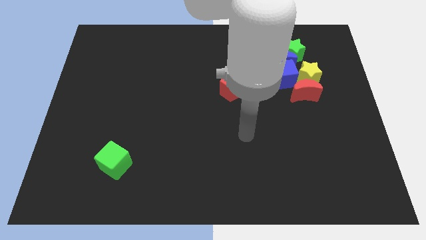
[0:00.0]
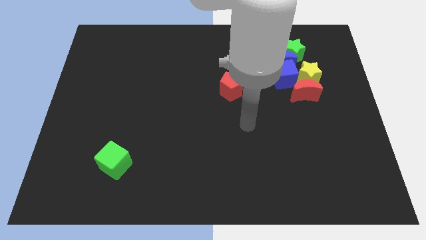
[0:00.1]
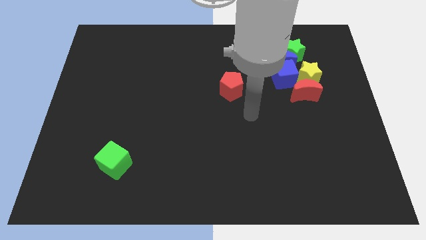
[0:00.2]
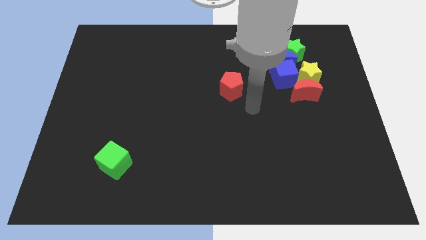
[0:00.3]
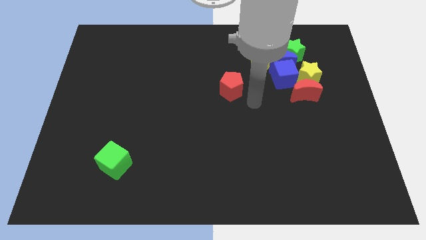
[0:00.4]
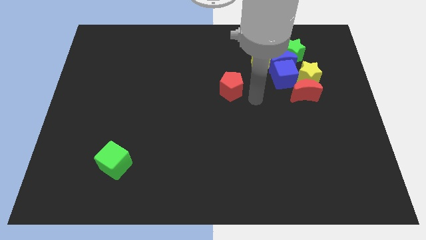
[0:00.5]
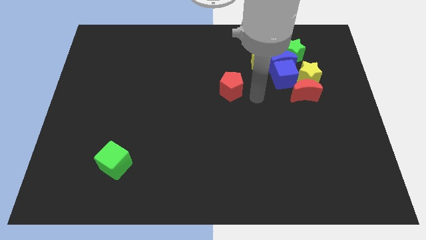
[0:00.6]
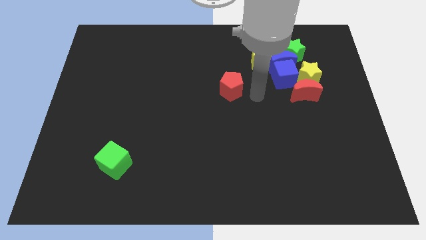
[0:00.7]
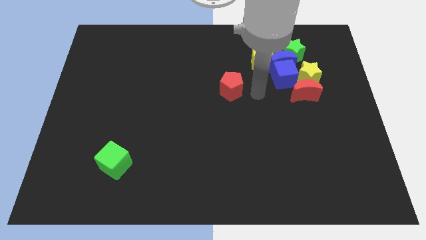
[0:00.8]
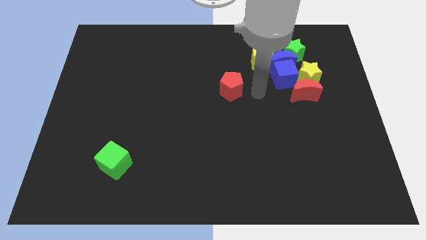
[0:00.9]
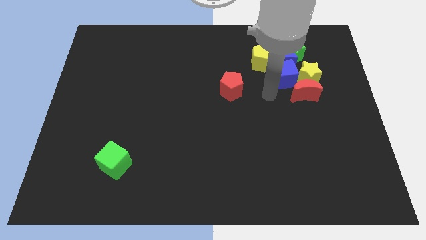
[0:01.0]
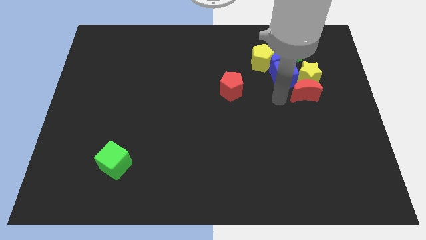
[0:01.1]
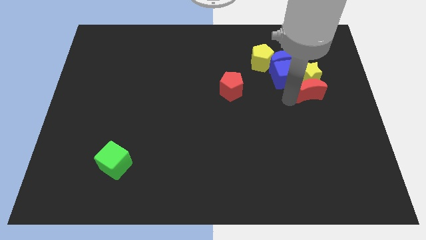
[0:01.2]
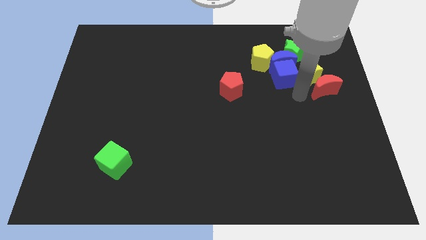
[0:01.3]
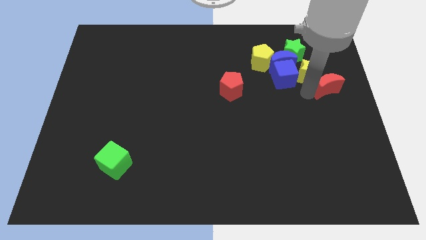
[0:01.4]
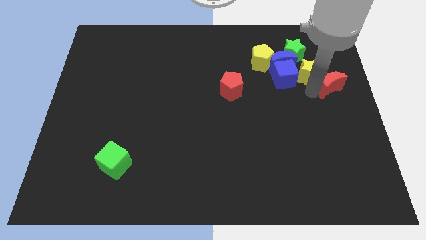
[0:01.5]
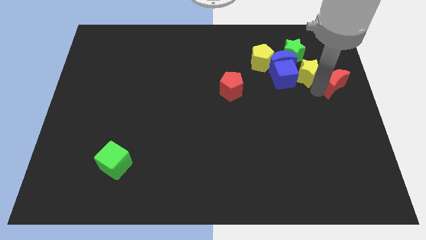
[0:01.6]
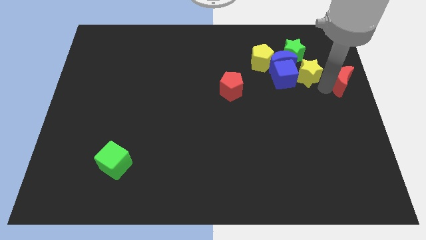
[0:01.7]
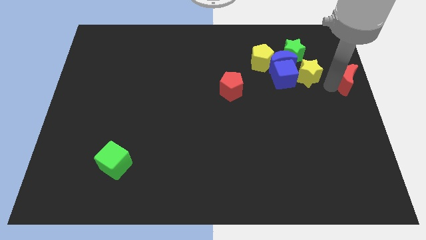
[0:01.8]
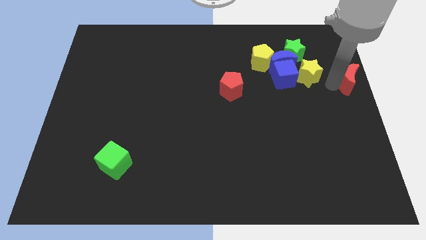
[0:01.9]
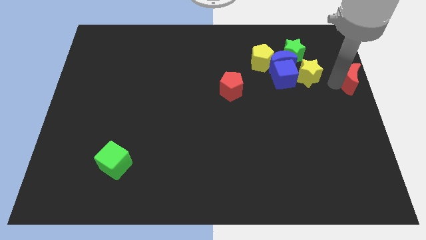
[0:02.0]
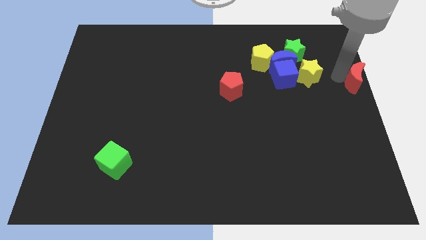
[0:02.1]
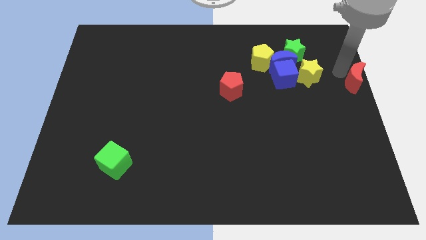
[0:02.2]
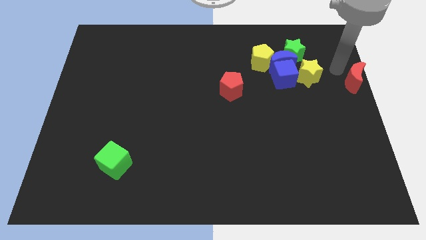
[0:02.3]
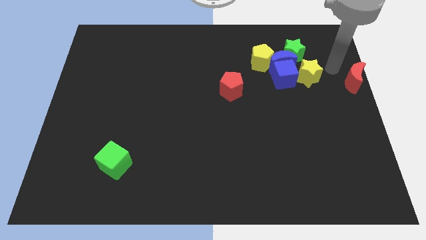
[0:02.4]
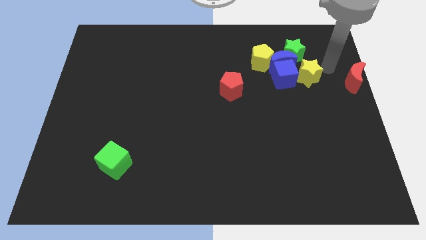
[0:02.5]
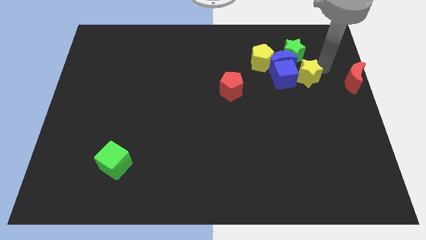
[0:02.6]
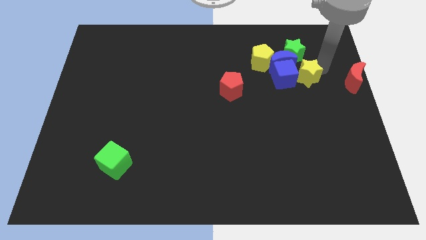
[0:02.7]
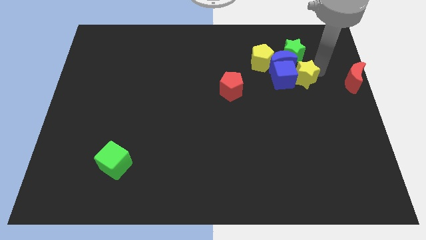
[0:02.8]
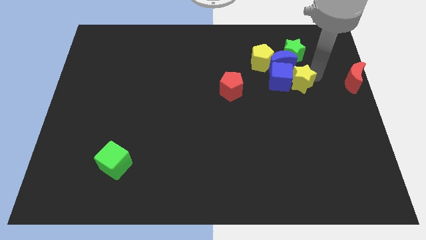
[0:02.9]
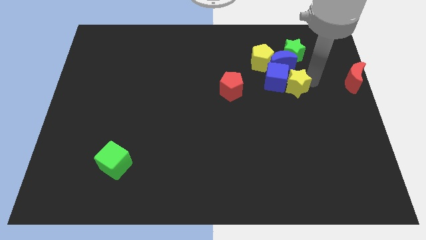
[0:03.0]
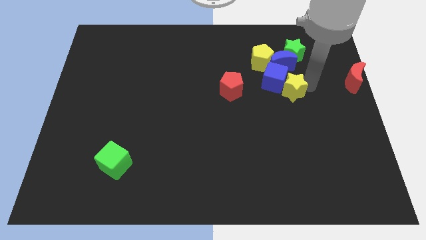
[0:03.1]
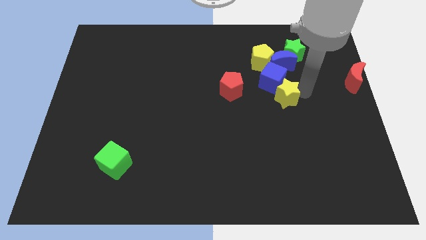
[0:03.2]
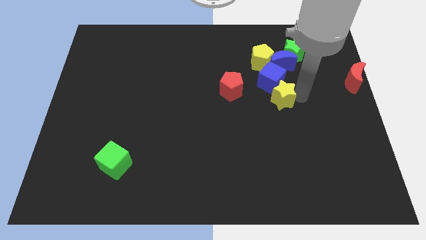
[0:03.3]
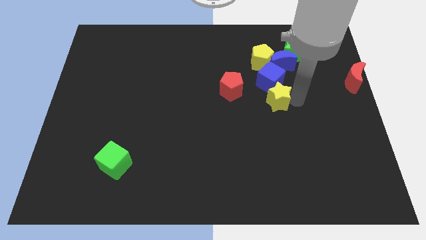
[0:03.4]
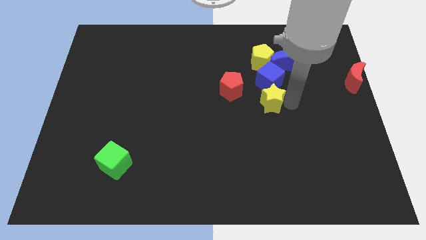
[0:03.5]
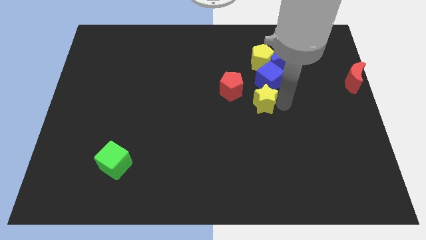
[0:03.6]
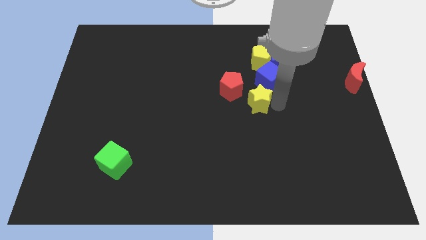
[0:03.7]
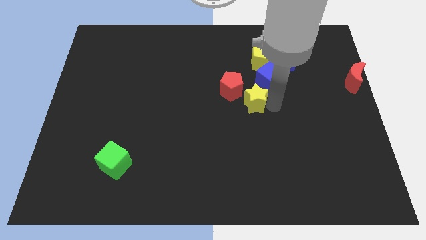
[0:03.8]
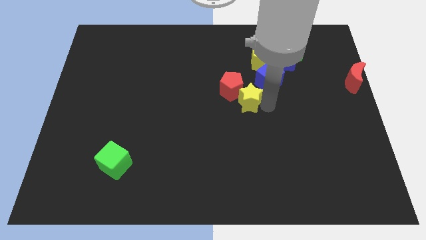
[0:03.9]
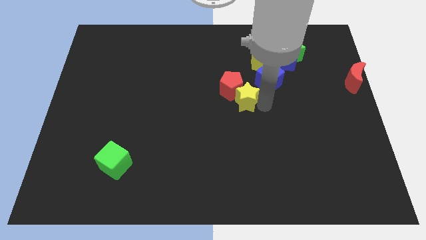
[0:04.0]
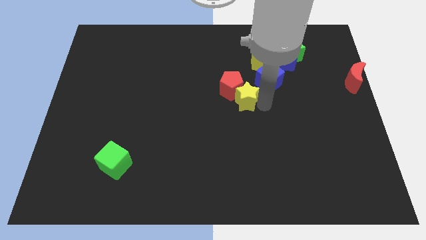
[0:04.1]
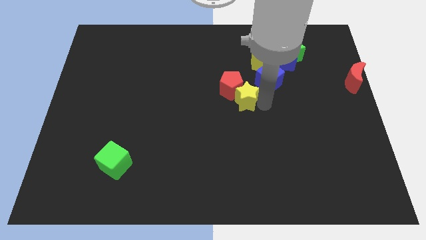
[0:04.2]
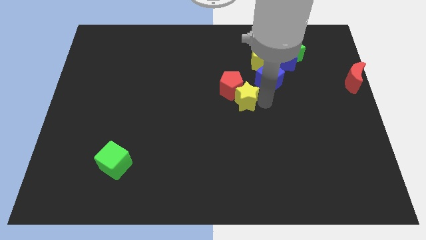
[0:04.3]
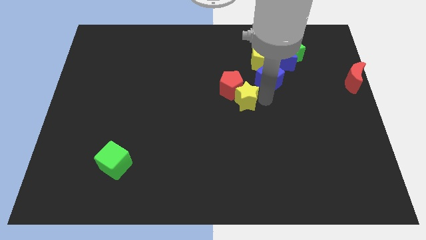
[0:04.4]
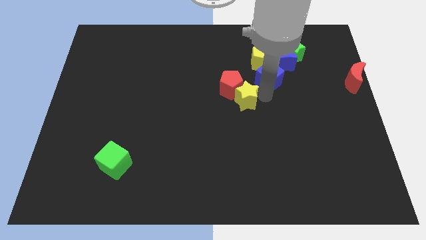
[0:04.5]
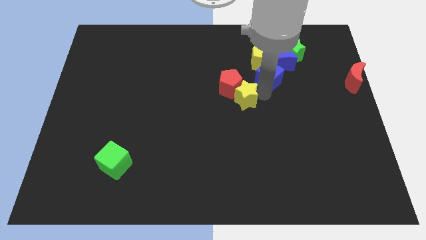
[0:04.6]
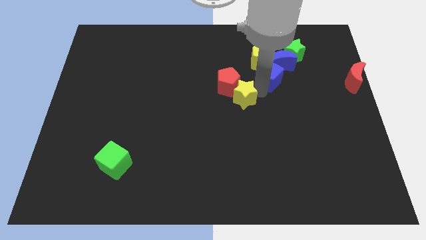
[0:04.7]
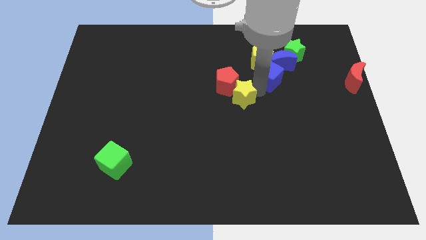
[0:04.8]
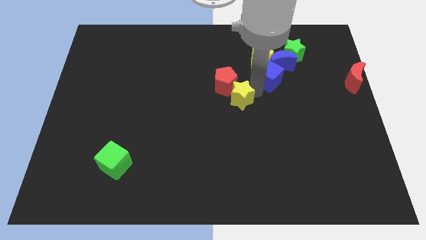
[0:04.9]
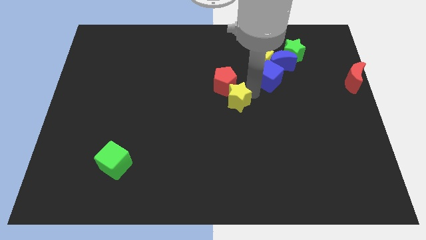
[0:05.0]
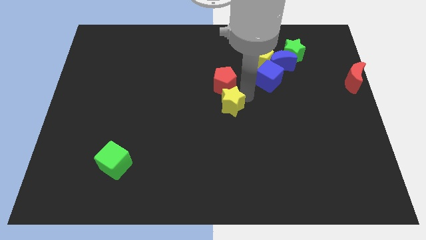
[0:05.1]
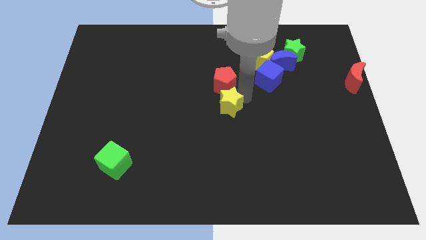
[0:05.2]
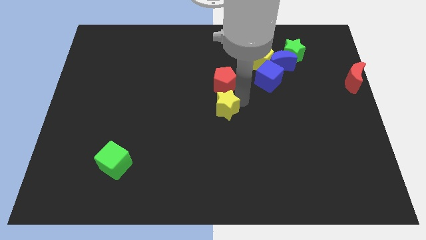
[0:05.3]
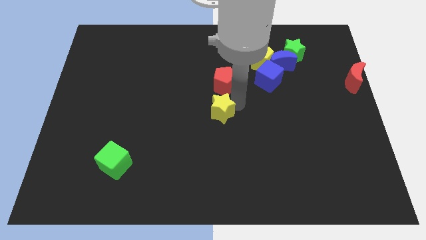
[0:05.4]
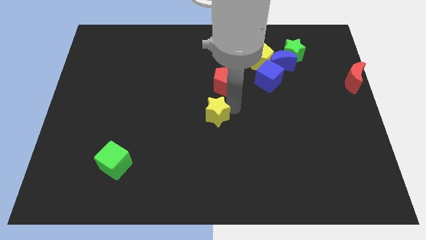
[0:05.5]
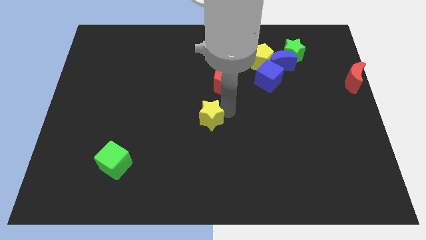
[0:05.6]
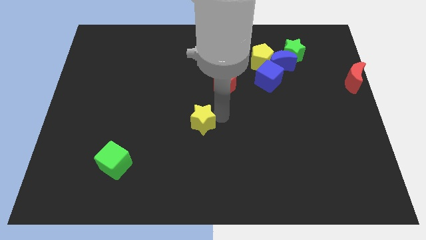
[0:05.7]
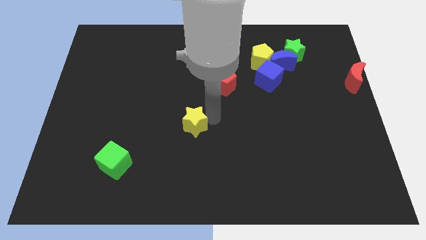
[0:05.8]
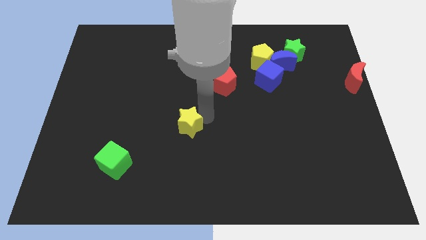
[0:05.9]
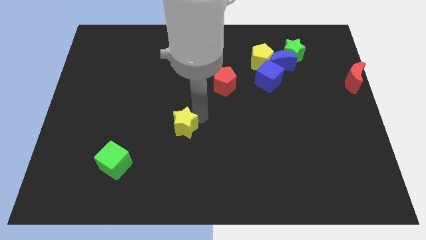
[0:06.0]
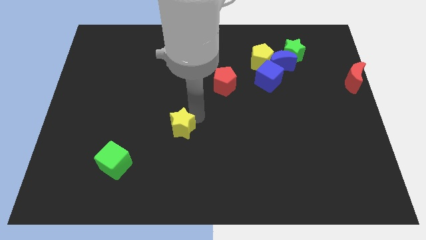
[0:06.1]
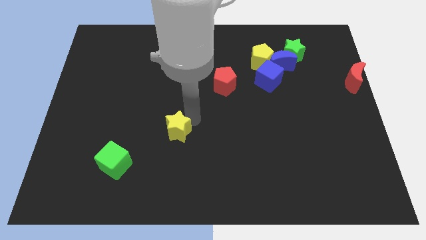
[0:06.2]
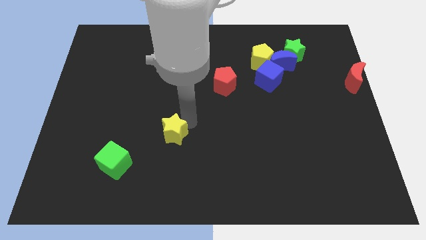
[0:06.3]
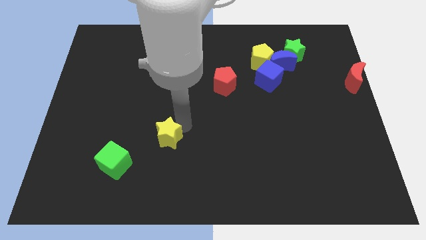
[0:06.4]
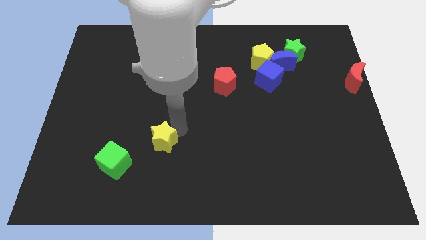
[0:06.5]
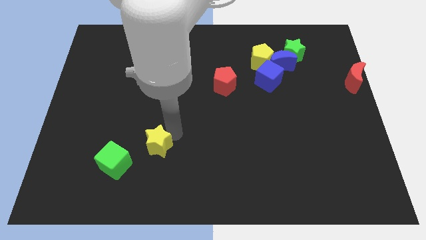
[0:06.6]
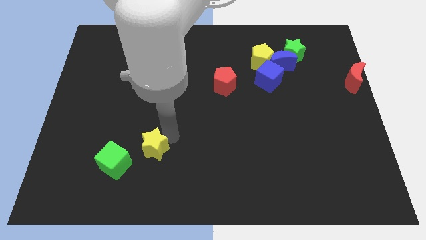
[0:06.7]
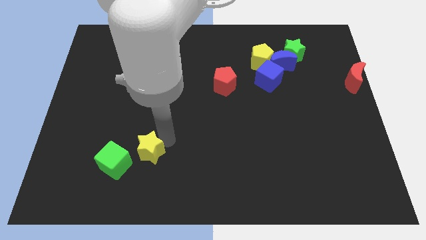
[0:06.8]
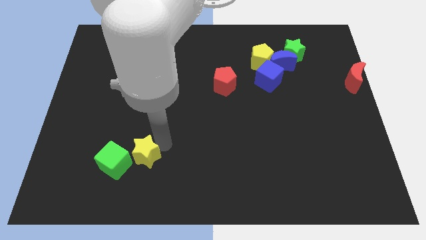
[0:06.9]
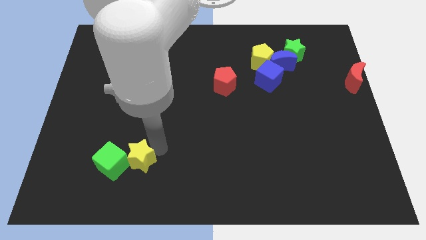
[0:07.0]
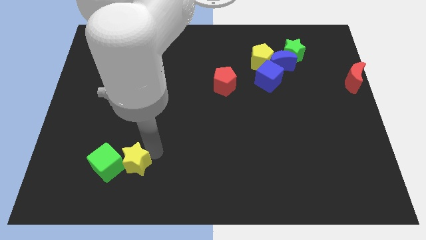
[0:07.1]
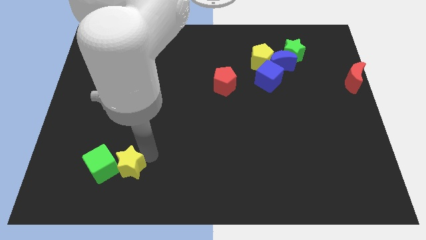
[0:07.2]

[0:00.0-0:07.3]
move the yellow star close to the green cube

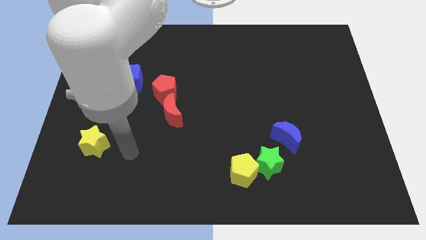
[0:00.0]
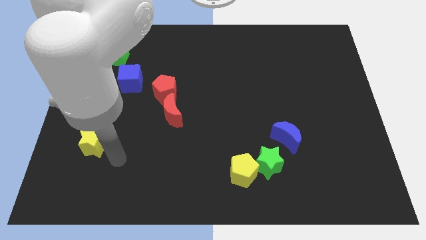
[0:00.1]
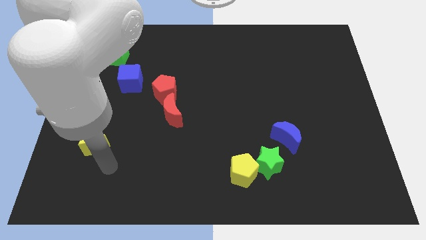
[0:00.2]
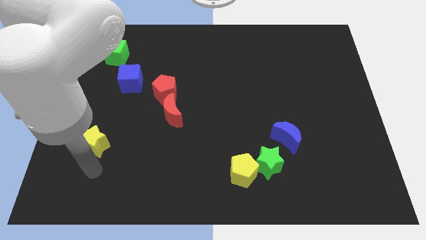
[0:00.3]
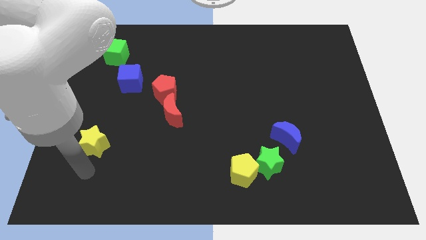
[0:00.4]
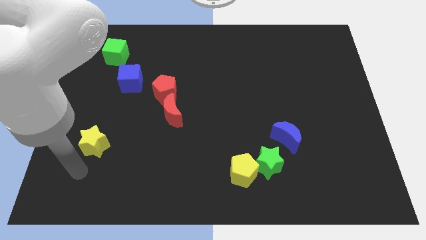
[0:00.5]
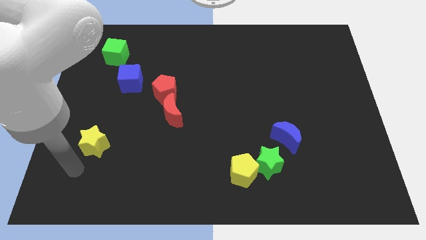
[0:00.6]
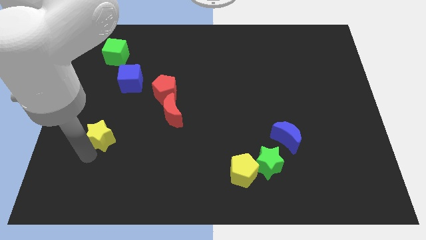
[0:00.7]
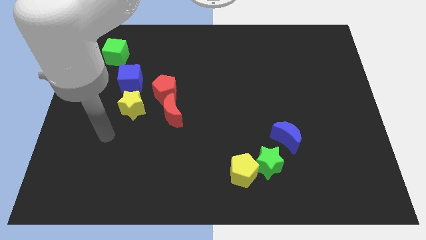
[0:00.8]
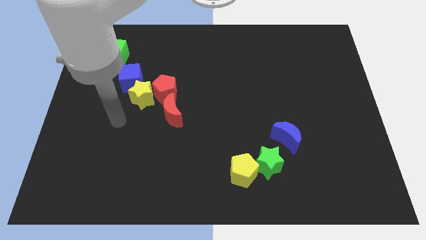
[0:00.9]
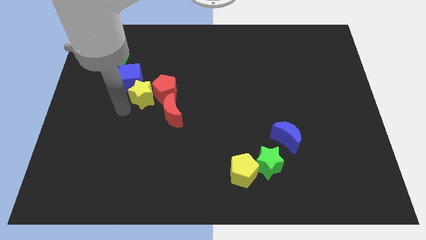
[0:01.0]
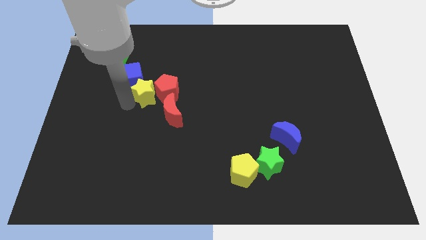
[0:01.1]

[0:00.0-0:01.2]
put the yellow star towards the red pentagon
